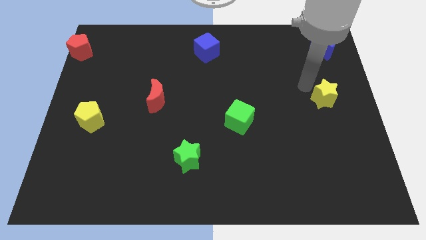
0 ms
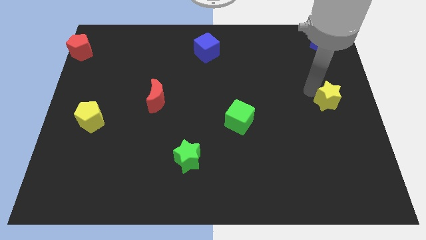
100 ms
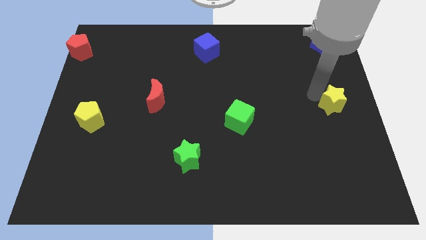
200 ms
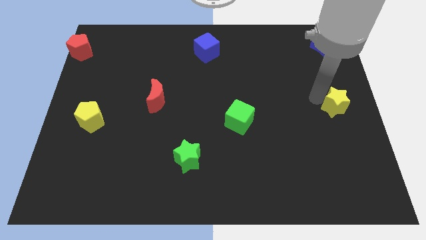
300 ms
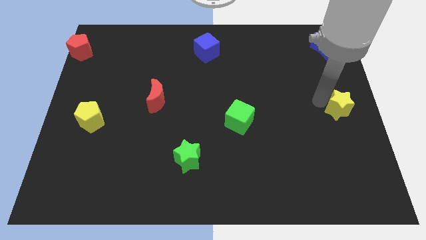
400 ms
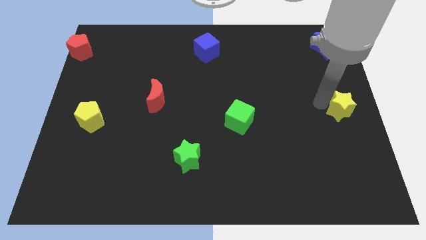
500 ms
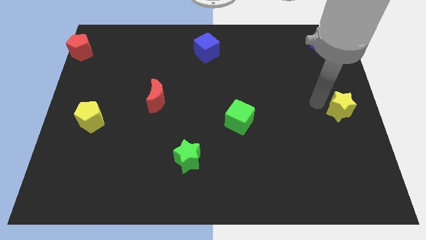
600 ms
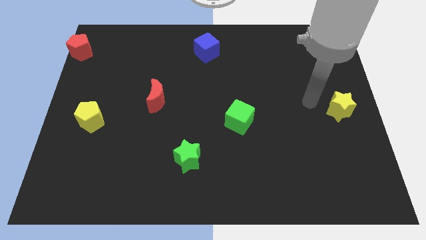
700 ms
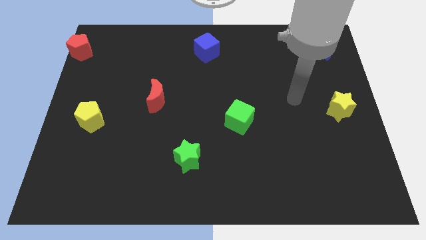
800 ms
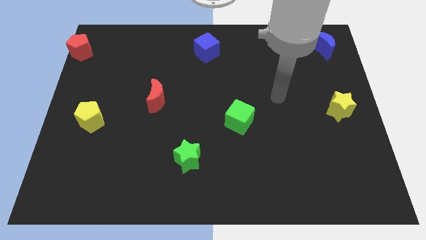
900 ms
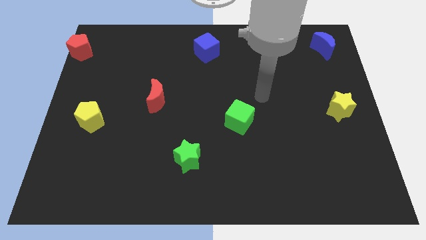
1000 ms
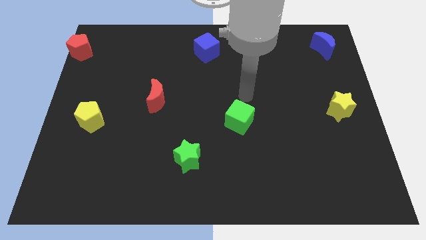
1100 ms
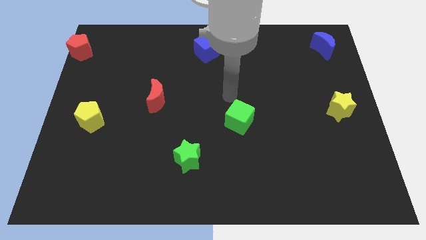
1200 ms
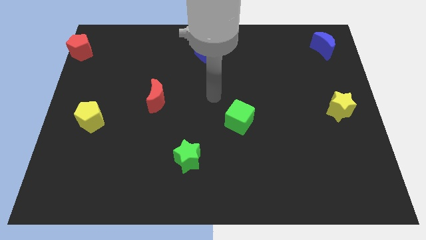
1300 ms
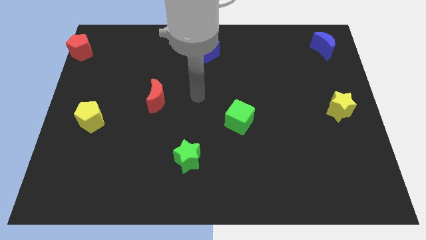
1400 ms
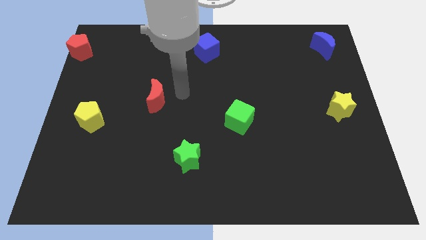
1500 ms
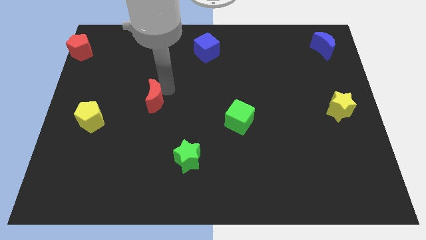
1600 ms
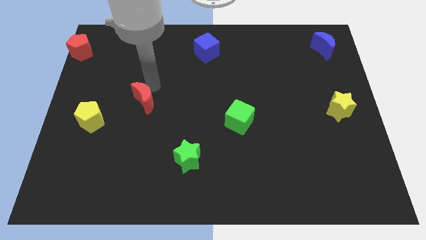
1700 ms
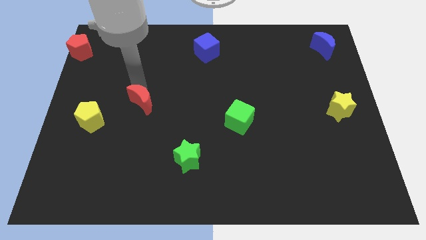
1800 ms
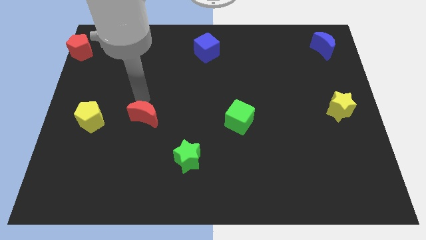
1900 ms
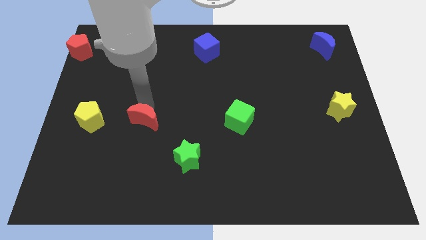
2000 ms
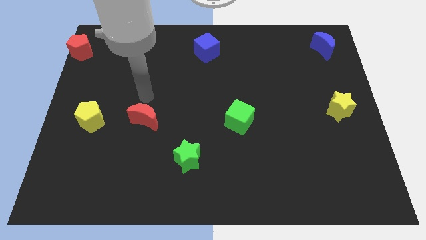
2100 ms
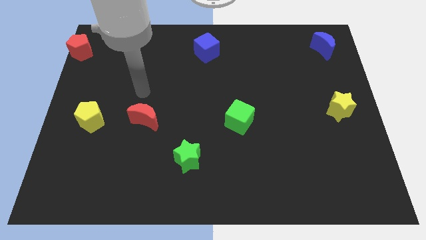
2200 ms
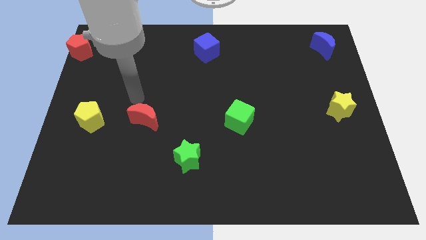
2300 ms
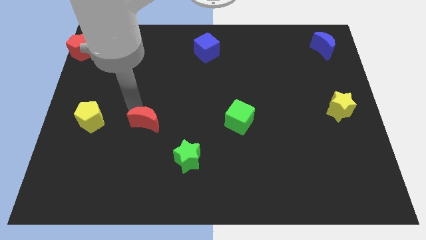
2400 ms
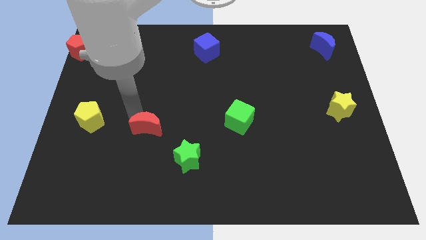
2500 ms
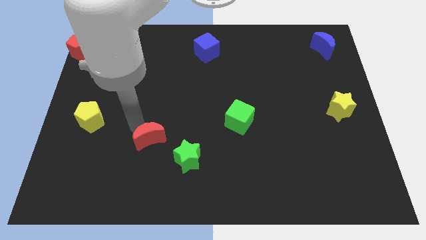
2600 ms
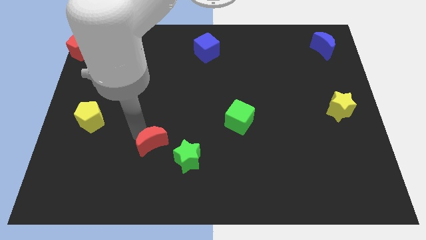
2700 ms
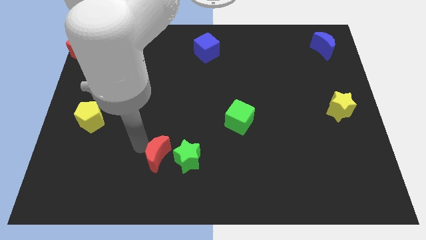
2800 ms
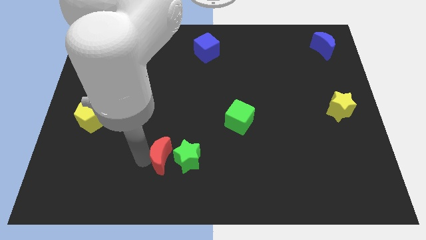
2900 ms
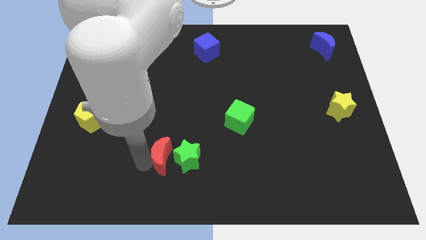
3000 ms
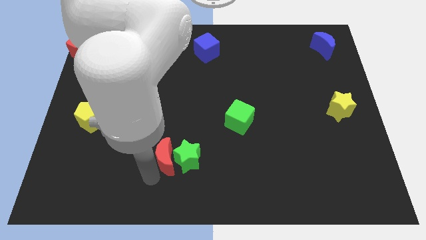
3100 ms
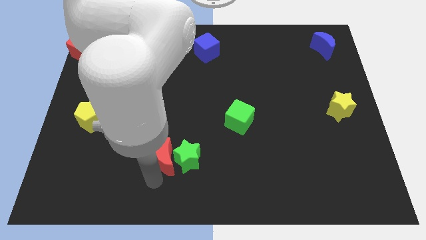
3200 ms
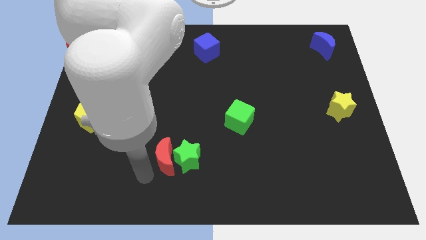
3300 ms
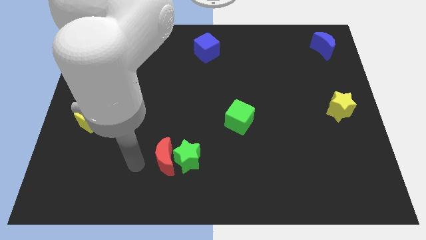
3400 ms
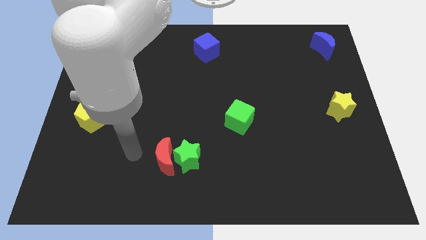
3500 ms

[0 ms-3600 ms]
push red crescent to the left of green star

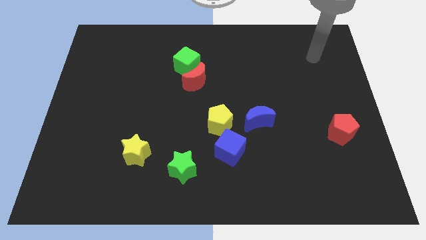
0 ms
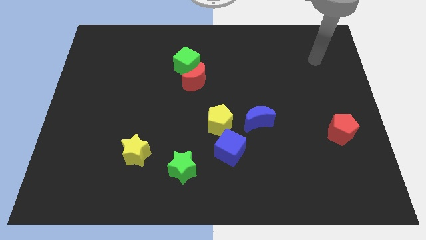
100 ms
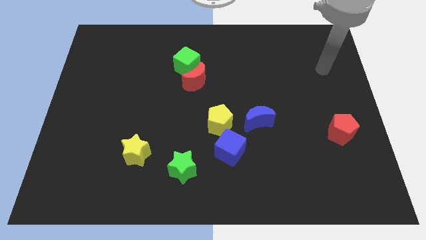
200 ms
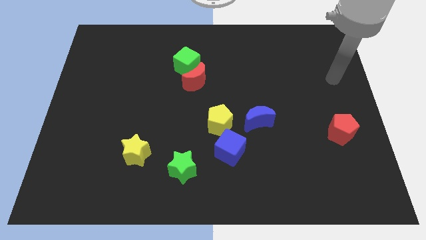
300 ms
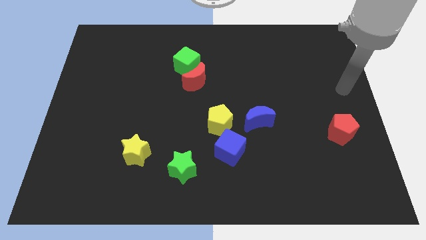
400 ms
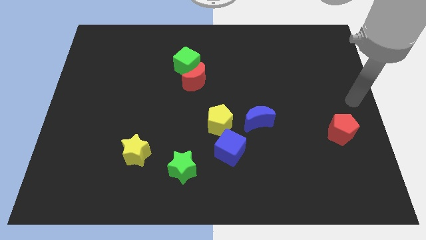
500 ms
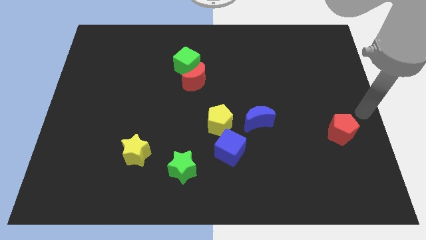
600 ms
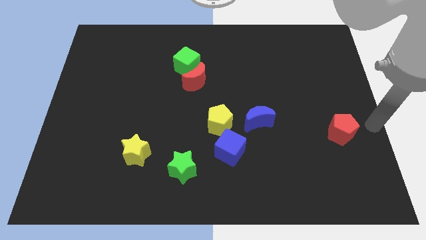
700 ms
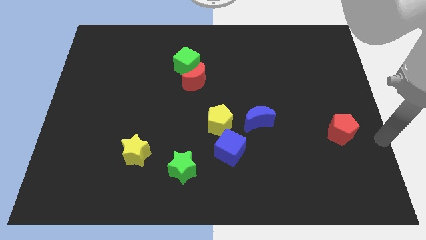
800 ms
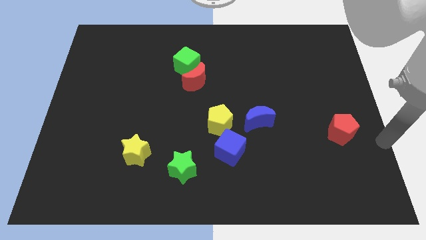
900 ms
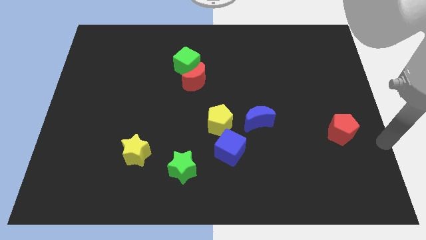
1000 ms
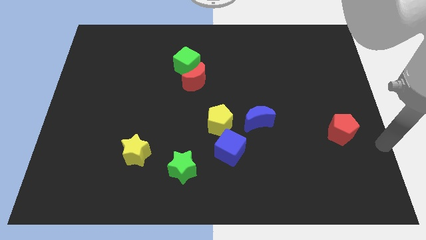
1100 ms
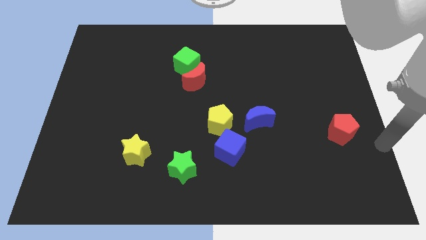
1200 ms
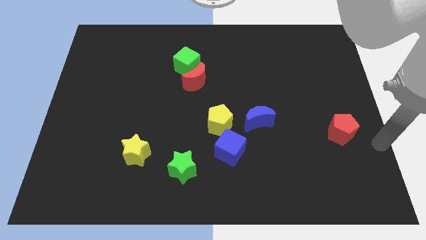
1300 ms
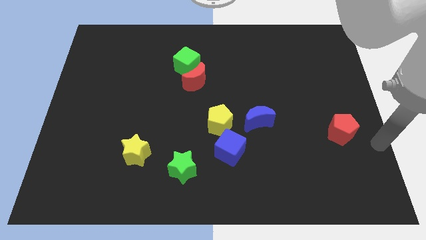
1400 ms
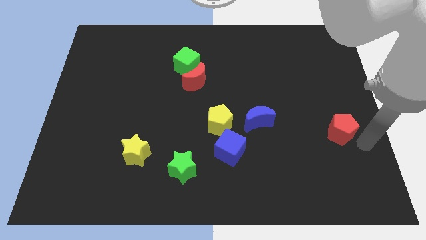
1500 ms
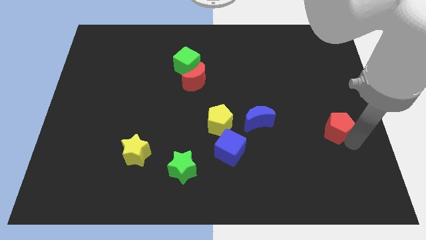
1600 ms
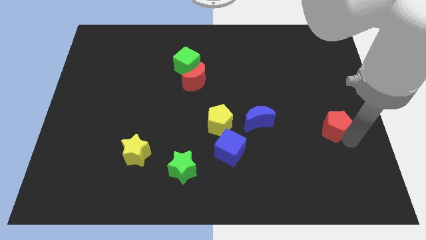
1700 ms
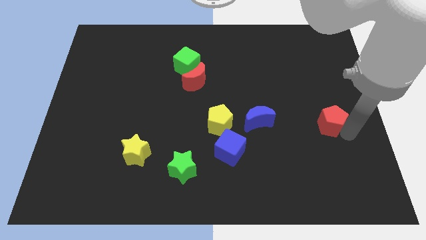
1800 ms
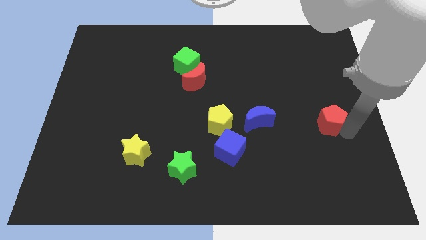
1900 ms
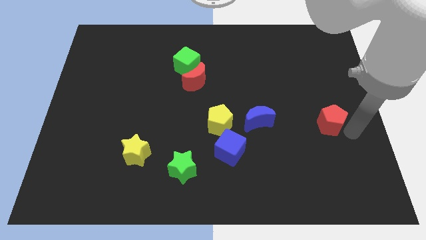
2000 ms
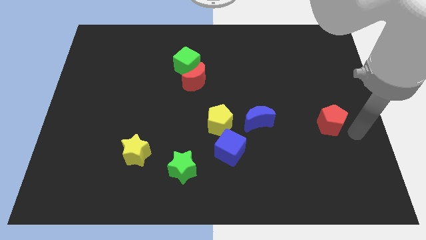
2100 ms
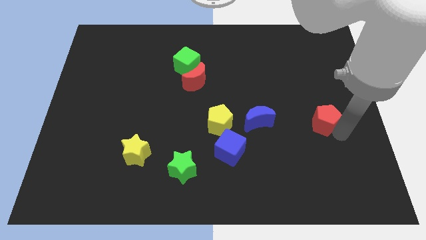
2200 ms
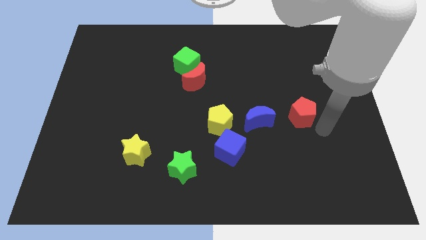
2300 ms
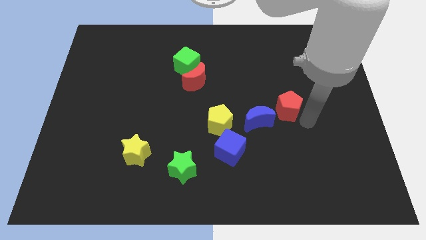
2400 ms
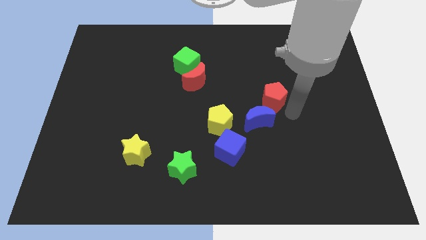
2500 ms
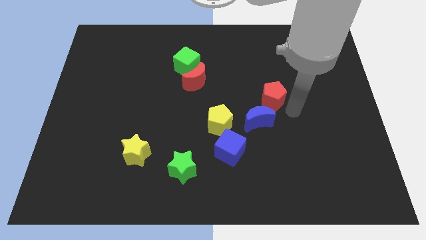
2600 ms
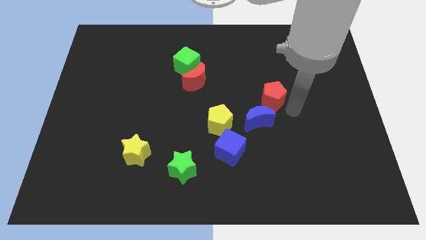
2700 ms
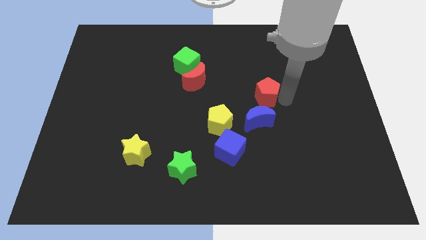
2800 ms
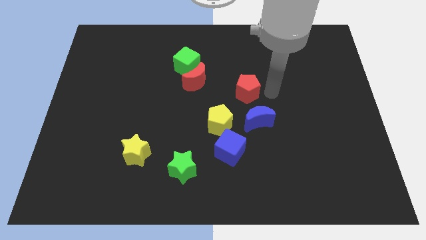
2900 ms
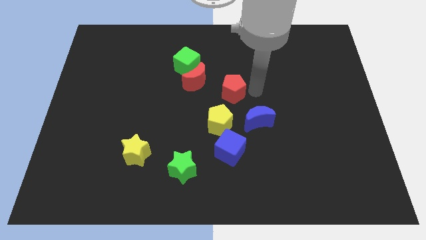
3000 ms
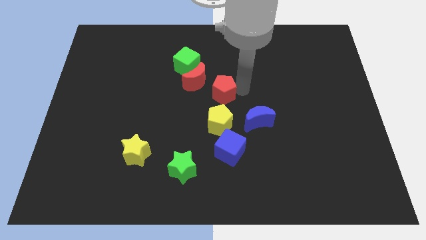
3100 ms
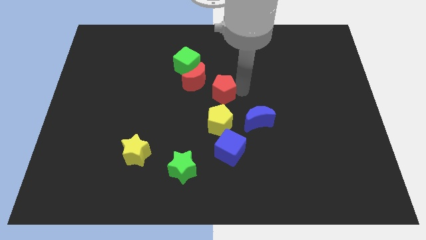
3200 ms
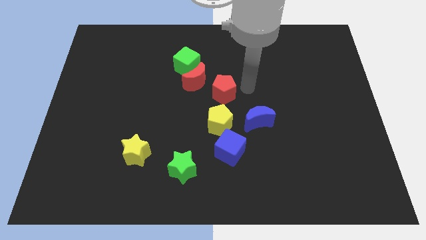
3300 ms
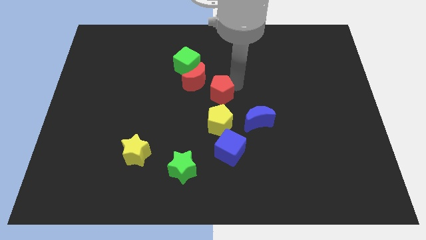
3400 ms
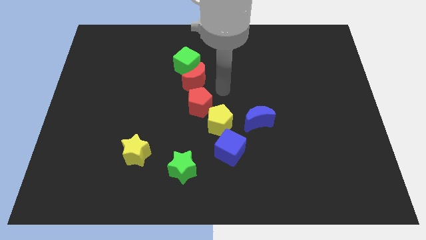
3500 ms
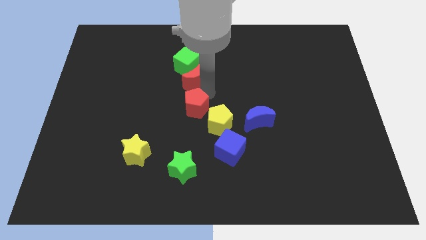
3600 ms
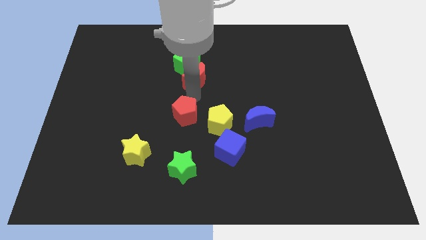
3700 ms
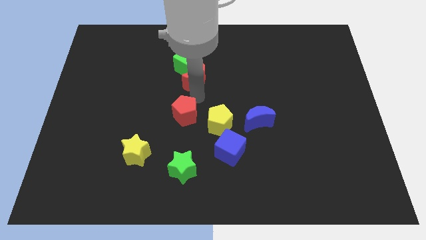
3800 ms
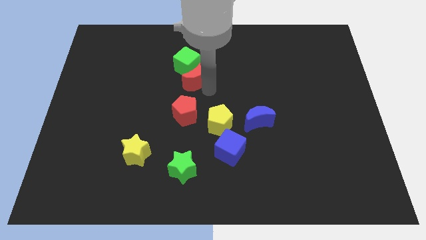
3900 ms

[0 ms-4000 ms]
move the red pentagon to the left of the yellow pentagon

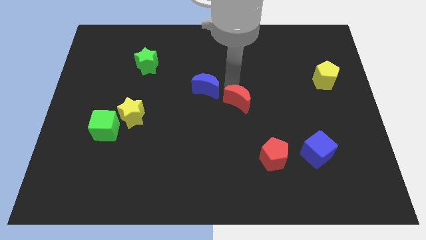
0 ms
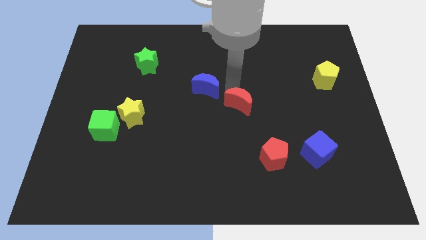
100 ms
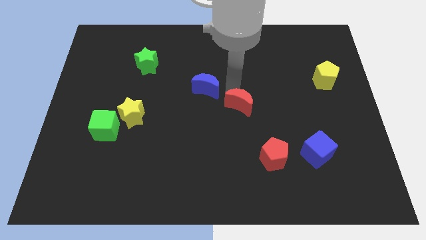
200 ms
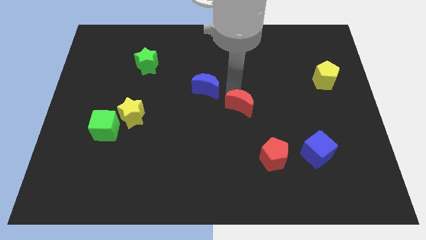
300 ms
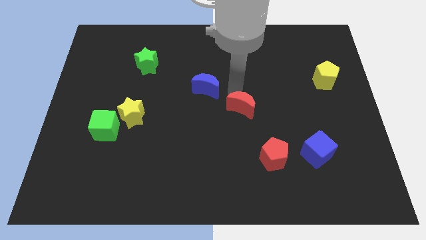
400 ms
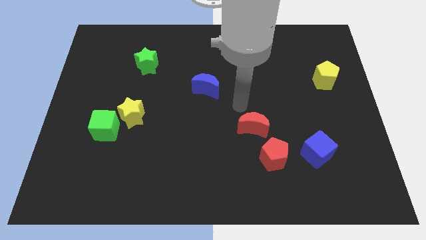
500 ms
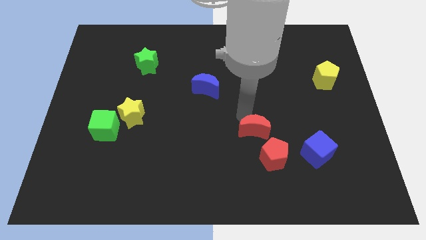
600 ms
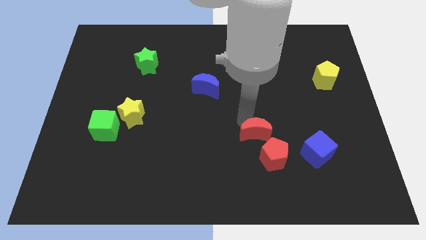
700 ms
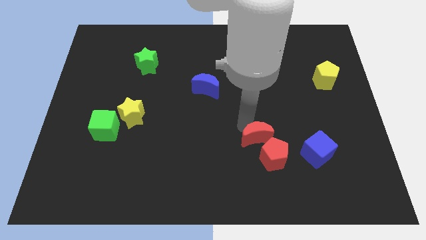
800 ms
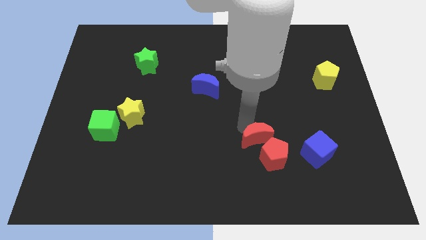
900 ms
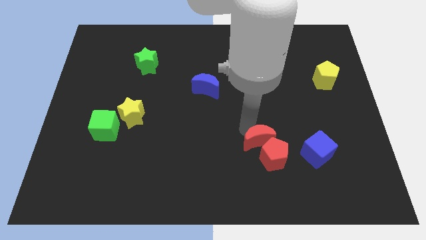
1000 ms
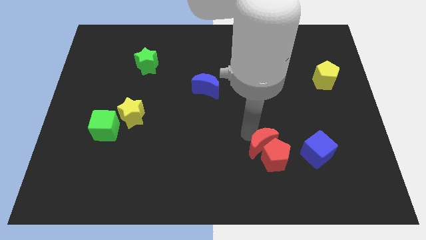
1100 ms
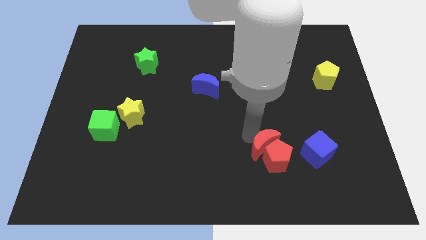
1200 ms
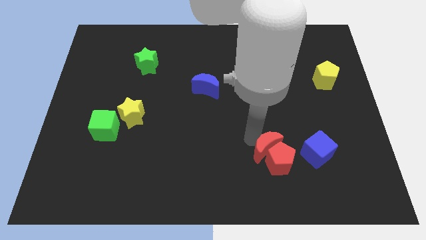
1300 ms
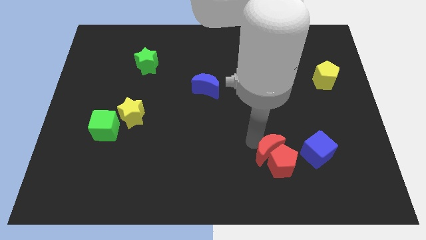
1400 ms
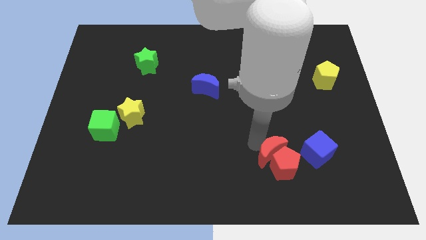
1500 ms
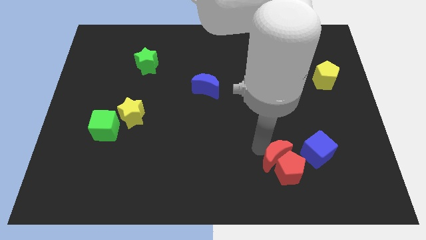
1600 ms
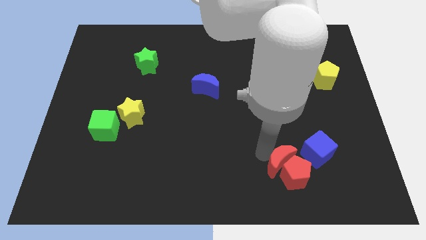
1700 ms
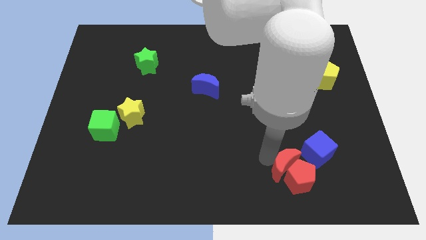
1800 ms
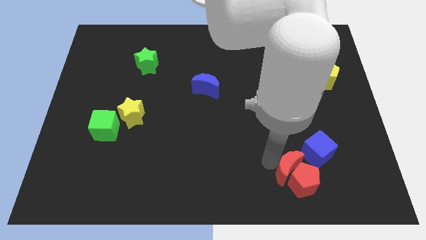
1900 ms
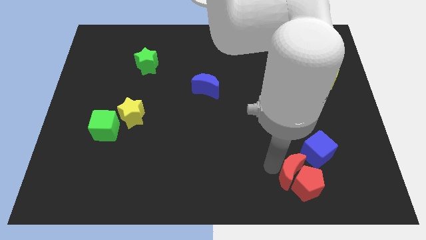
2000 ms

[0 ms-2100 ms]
push the red moon into the red pentagon
